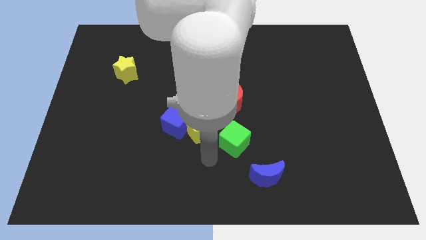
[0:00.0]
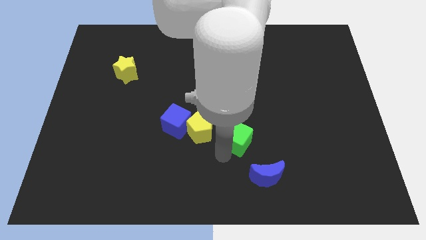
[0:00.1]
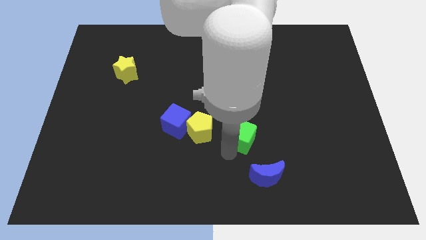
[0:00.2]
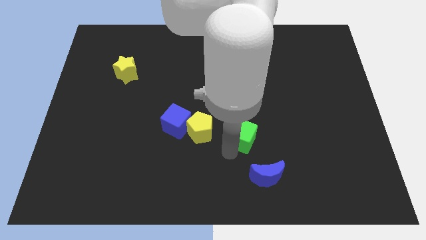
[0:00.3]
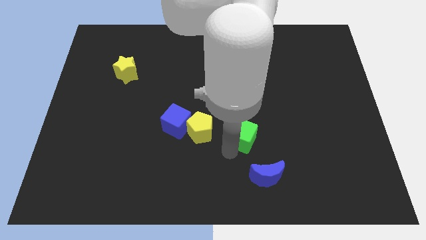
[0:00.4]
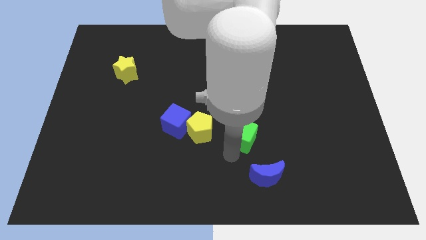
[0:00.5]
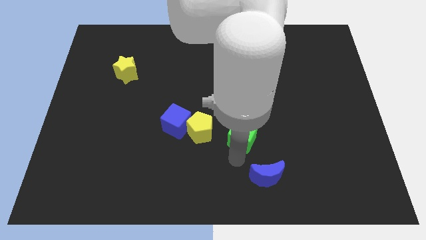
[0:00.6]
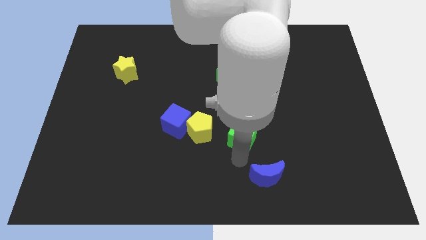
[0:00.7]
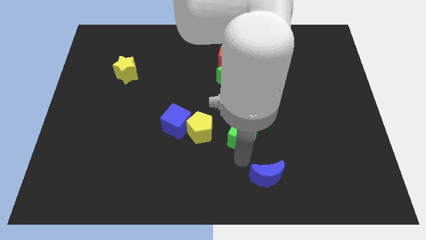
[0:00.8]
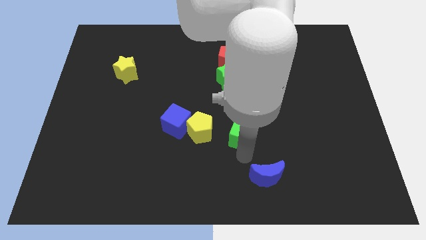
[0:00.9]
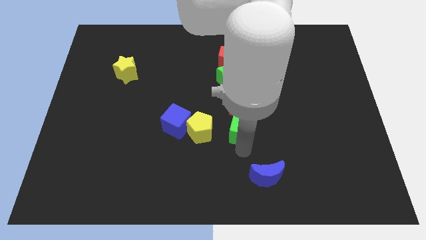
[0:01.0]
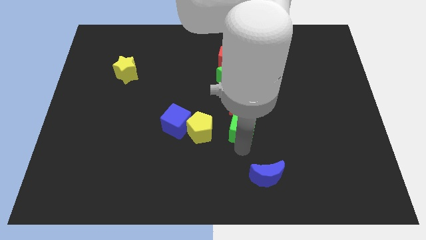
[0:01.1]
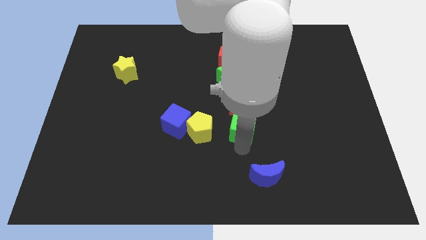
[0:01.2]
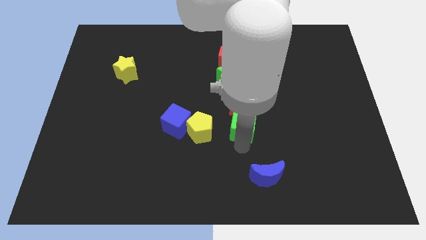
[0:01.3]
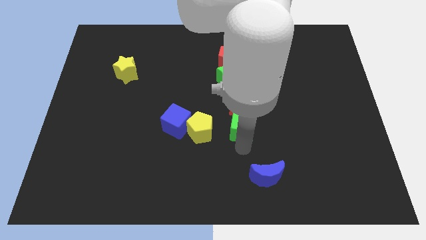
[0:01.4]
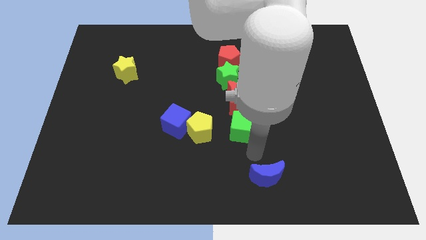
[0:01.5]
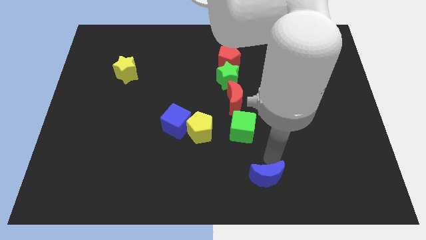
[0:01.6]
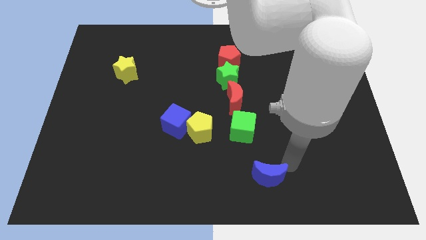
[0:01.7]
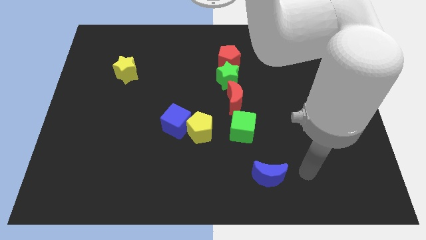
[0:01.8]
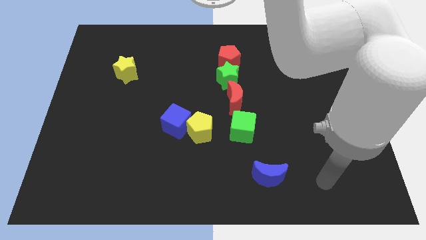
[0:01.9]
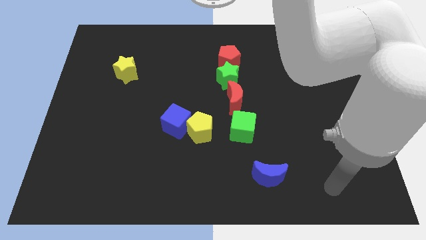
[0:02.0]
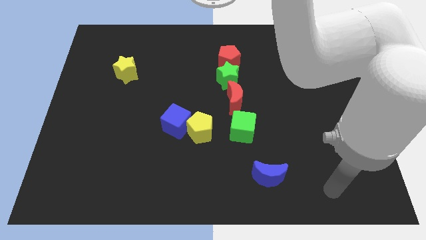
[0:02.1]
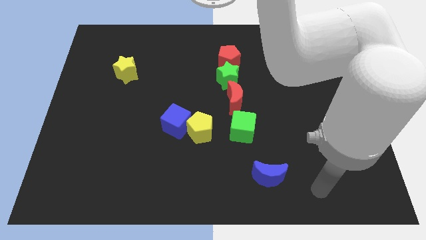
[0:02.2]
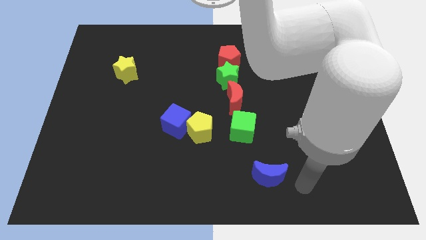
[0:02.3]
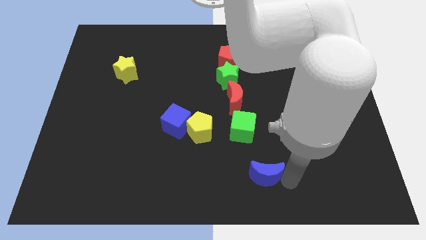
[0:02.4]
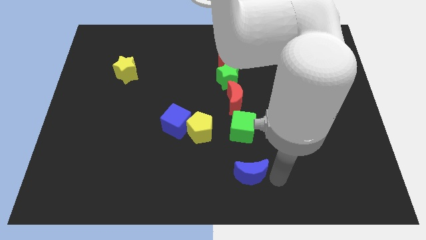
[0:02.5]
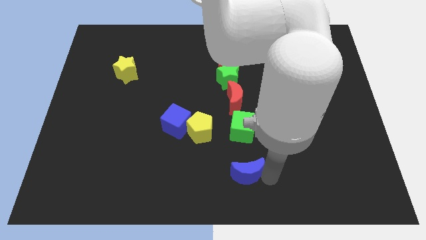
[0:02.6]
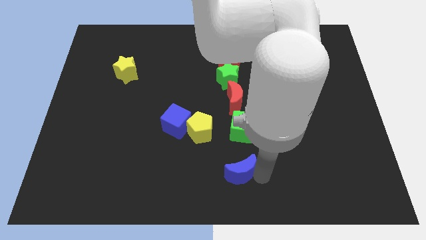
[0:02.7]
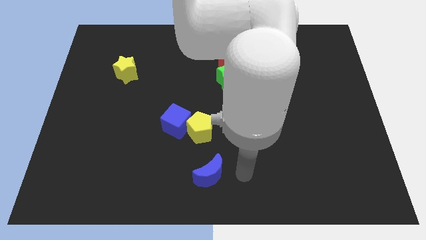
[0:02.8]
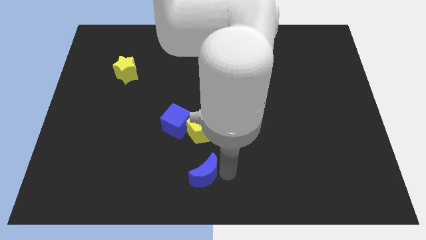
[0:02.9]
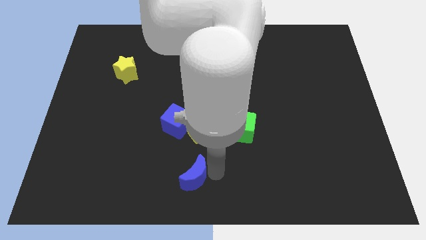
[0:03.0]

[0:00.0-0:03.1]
slide blue crescent below yellow pentagon

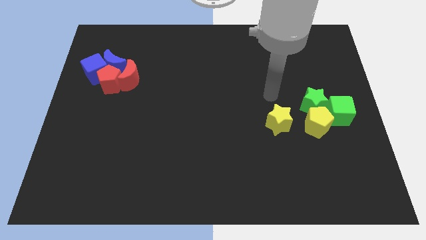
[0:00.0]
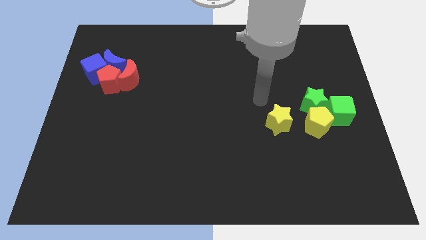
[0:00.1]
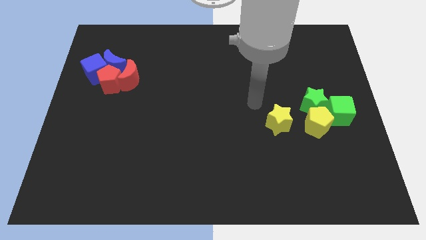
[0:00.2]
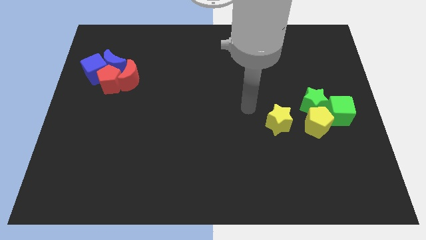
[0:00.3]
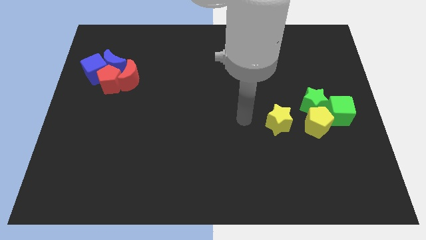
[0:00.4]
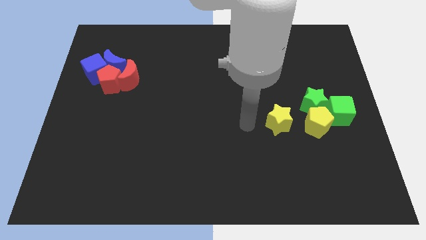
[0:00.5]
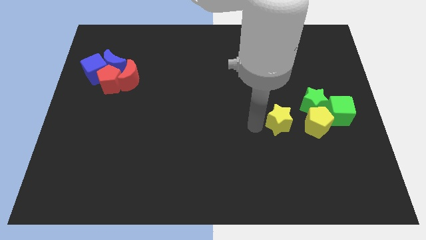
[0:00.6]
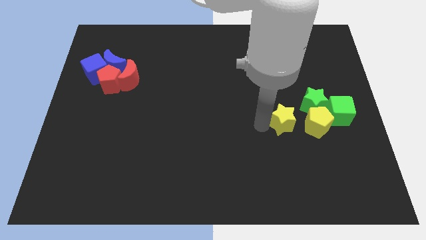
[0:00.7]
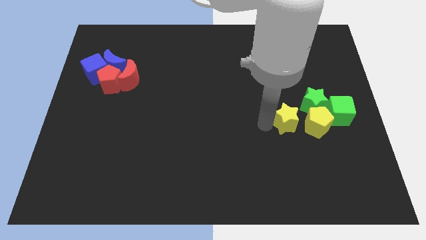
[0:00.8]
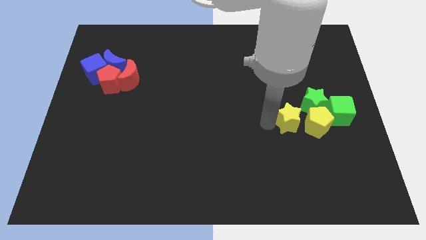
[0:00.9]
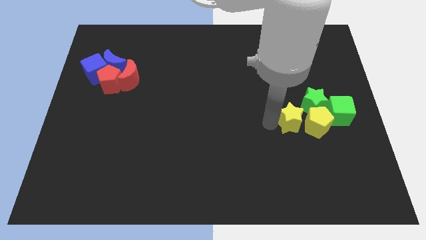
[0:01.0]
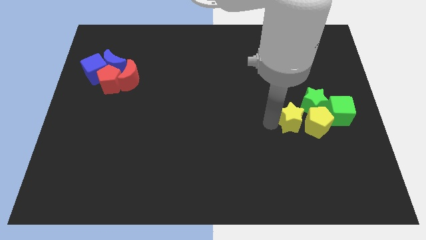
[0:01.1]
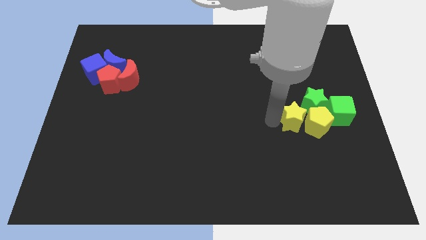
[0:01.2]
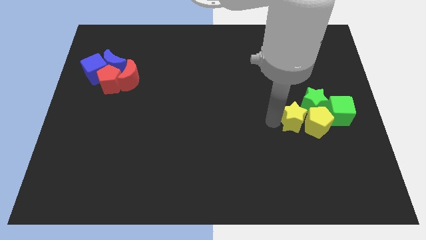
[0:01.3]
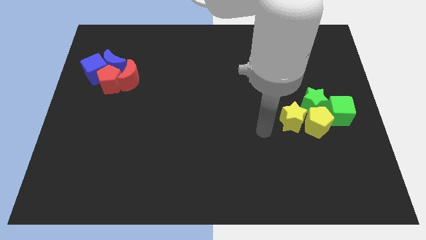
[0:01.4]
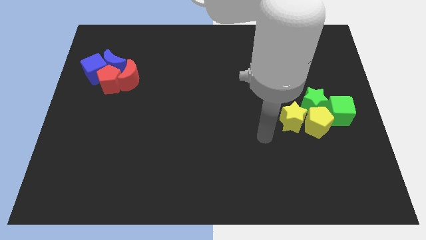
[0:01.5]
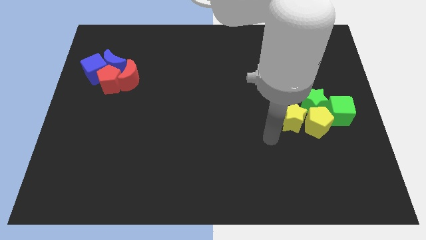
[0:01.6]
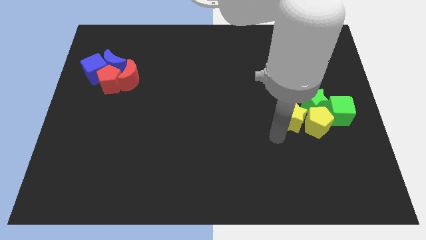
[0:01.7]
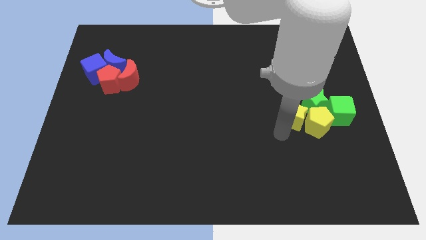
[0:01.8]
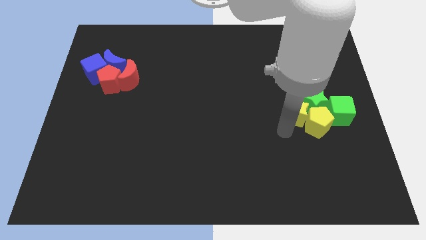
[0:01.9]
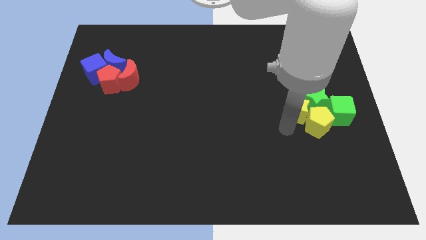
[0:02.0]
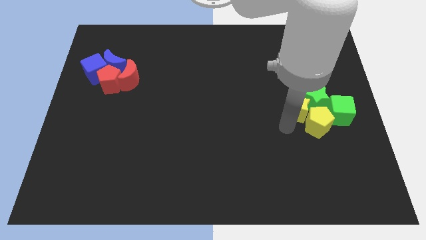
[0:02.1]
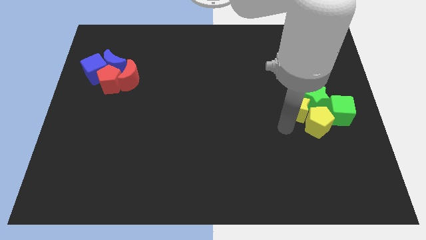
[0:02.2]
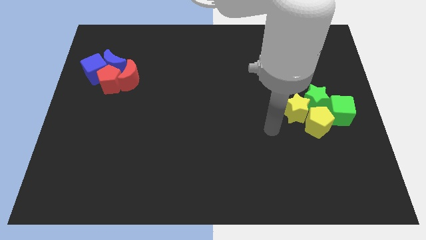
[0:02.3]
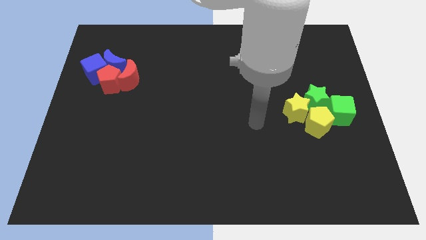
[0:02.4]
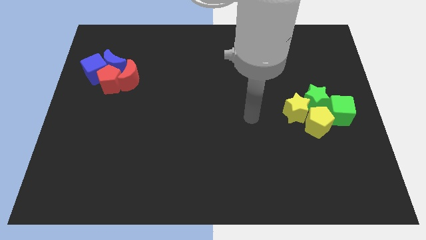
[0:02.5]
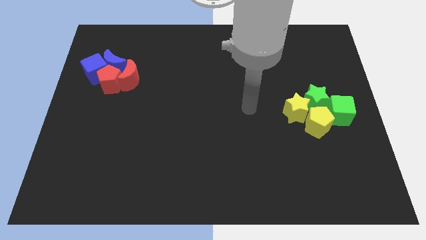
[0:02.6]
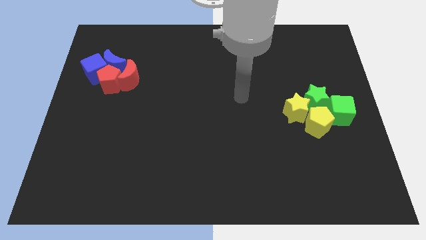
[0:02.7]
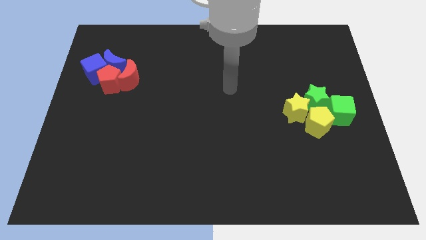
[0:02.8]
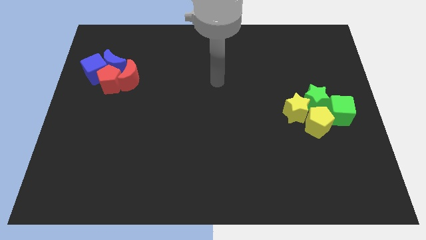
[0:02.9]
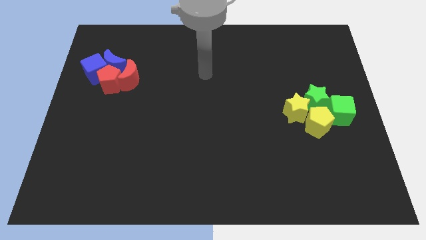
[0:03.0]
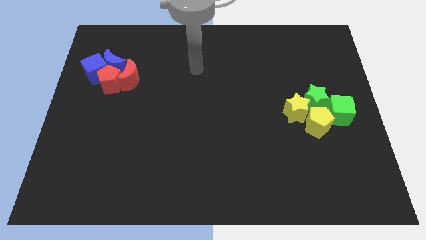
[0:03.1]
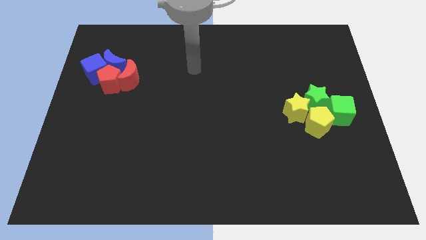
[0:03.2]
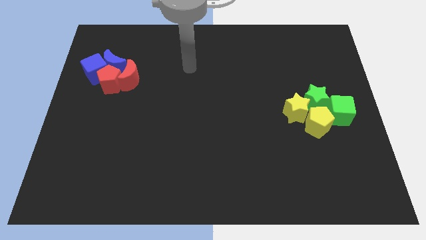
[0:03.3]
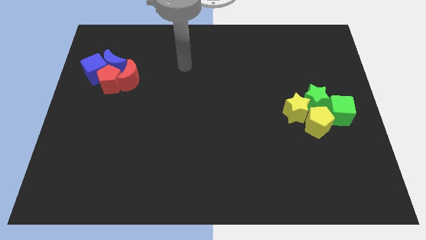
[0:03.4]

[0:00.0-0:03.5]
push the yellow star into the green star

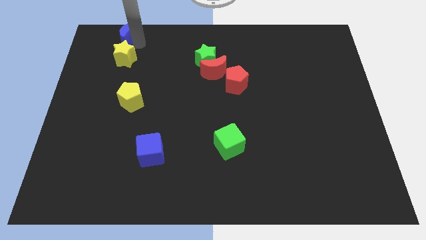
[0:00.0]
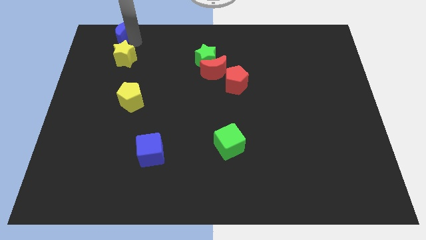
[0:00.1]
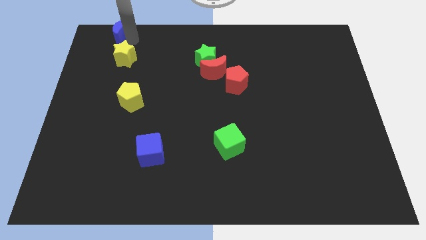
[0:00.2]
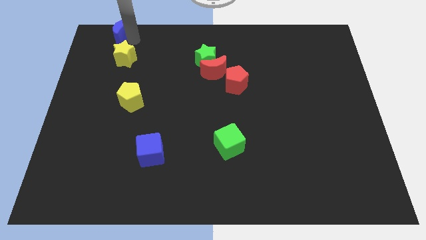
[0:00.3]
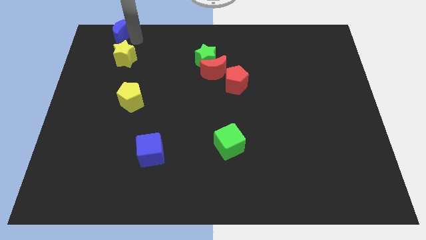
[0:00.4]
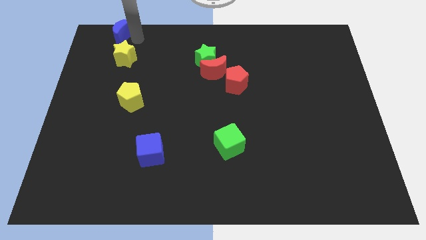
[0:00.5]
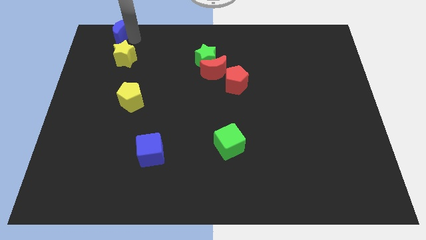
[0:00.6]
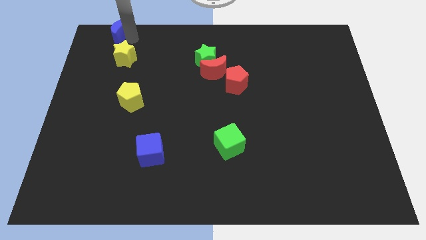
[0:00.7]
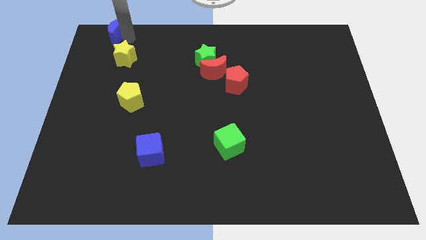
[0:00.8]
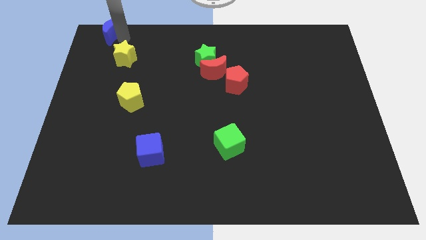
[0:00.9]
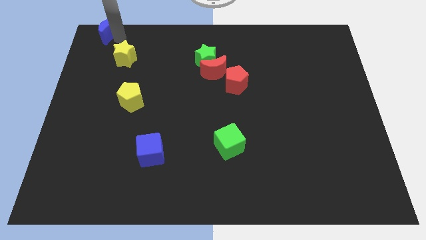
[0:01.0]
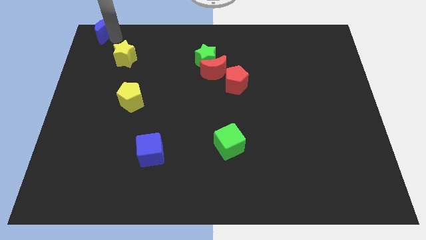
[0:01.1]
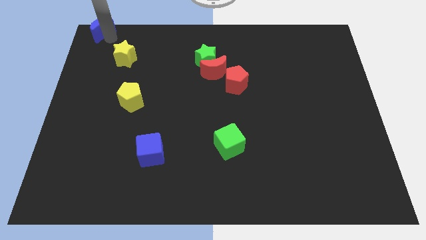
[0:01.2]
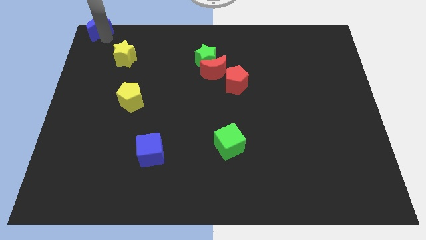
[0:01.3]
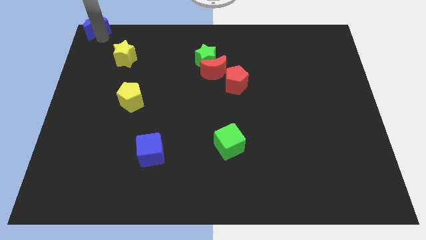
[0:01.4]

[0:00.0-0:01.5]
push the blue crescent to the top left of the board

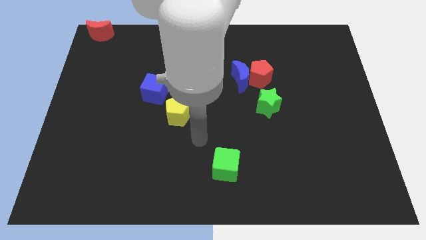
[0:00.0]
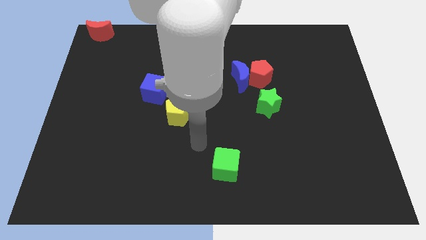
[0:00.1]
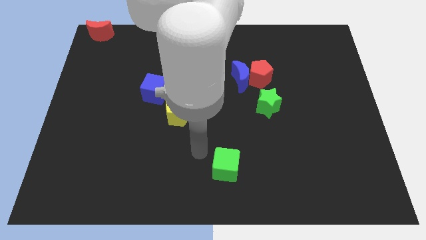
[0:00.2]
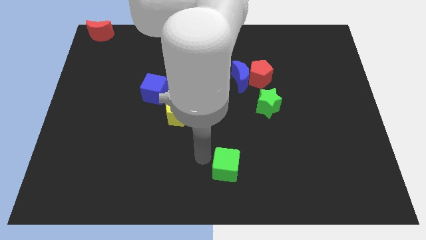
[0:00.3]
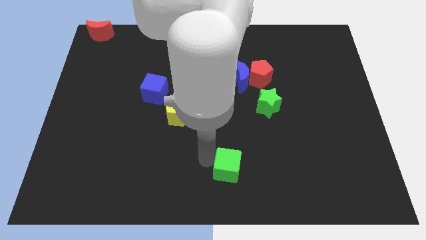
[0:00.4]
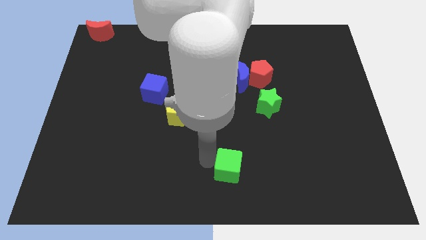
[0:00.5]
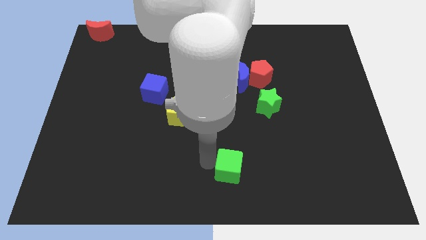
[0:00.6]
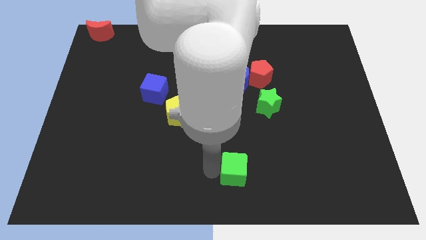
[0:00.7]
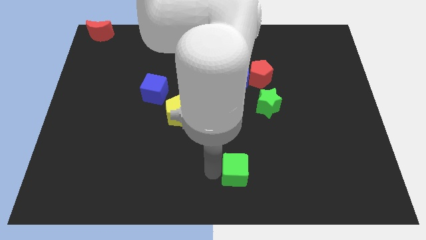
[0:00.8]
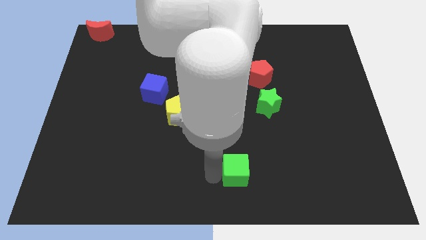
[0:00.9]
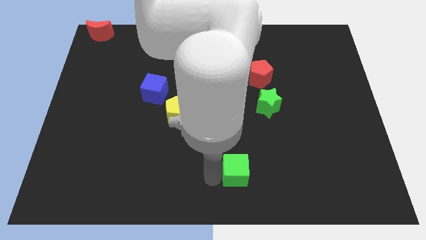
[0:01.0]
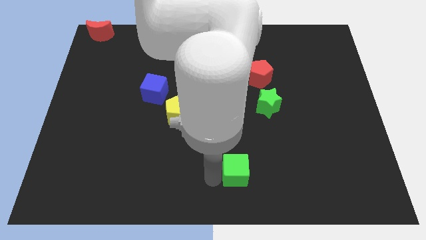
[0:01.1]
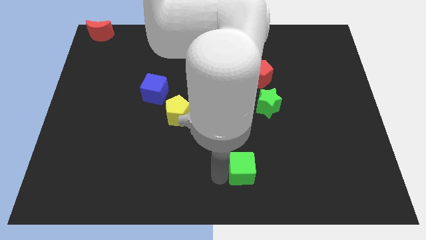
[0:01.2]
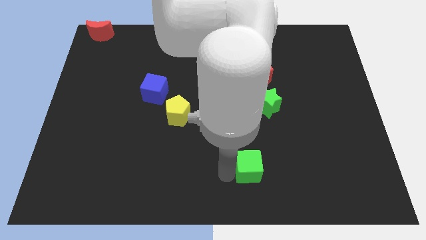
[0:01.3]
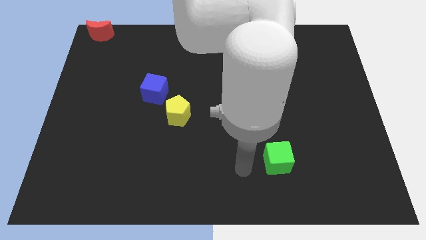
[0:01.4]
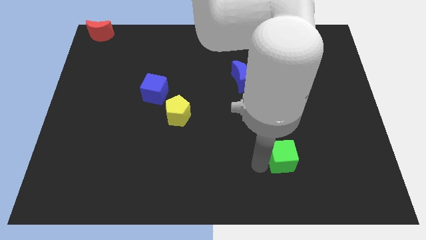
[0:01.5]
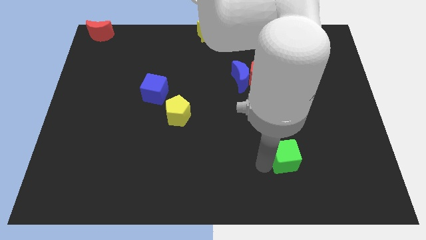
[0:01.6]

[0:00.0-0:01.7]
push the green cube slightly to its right
